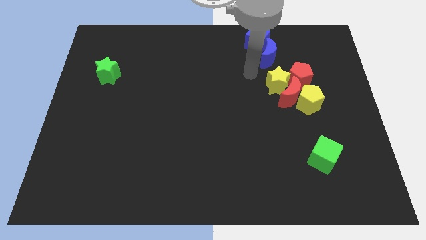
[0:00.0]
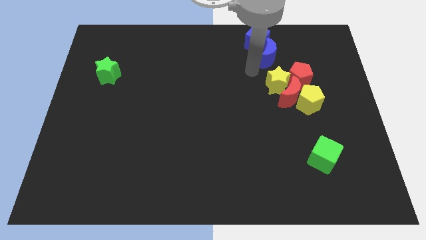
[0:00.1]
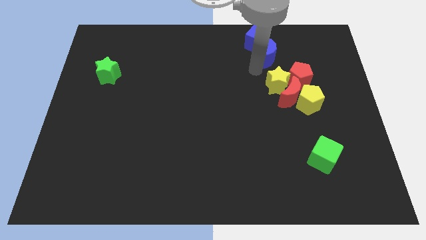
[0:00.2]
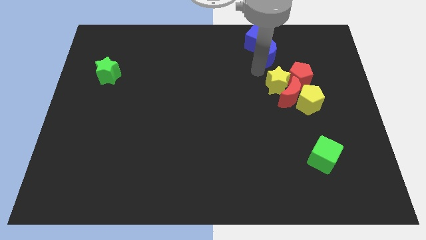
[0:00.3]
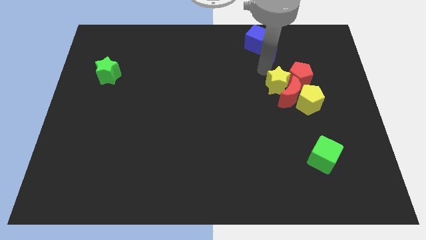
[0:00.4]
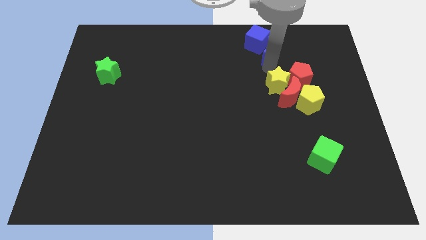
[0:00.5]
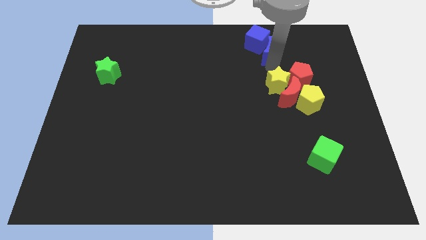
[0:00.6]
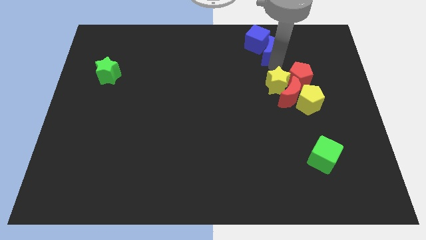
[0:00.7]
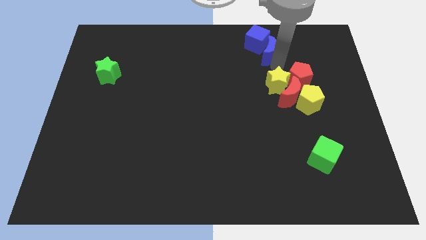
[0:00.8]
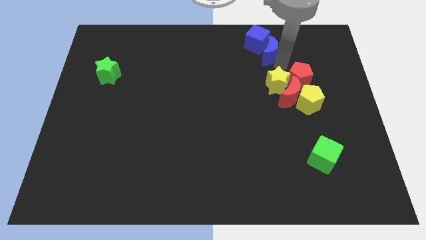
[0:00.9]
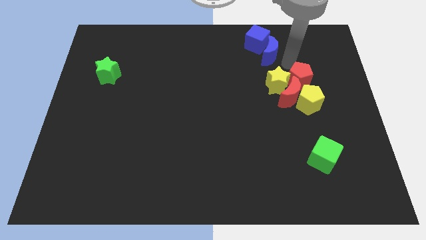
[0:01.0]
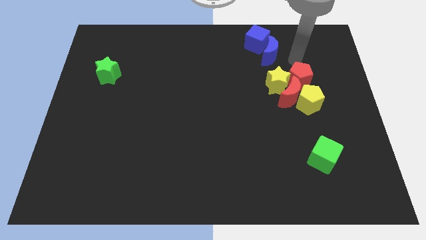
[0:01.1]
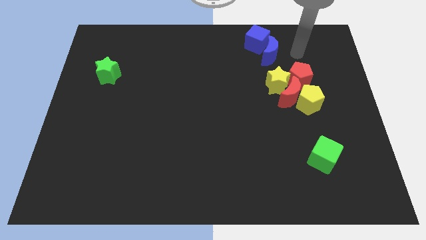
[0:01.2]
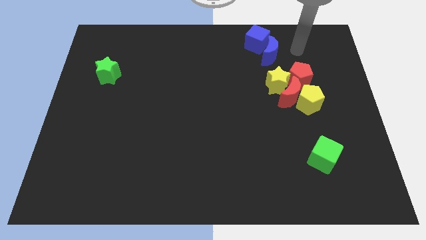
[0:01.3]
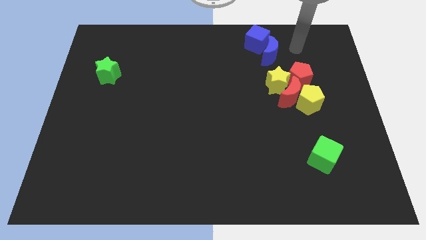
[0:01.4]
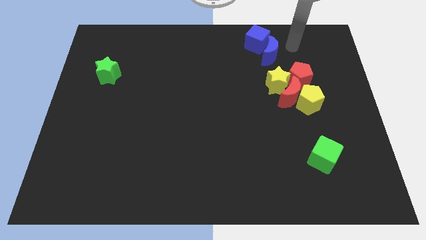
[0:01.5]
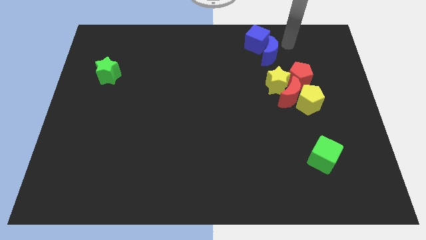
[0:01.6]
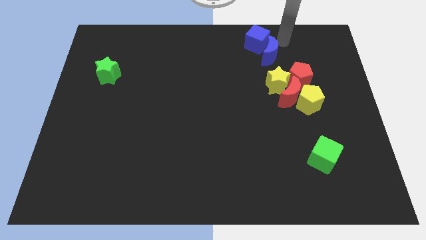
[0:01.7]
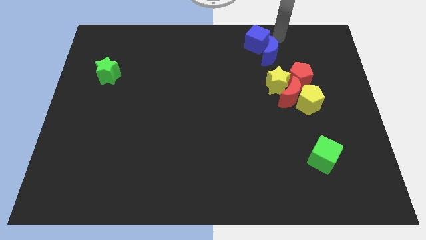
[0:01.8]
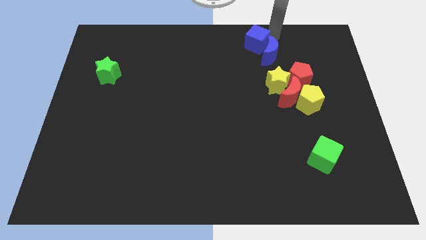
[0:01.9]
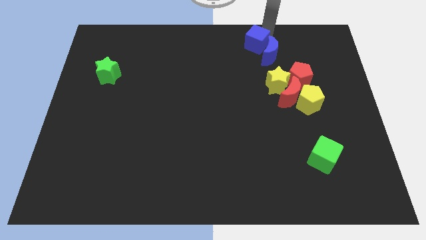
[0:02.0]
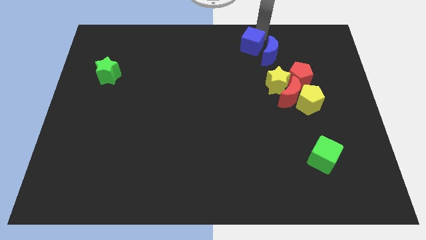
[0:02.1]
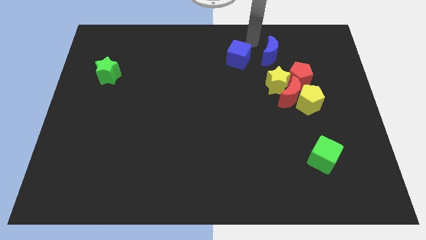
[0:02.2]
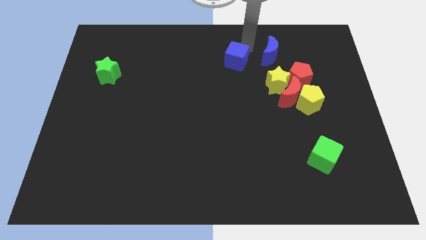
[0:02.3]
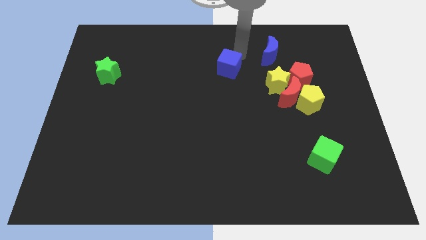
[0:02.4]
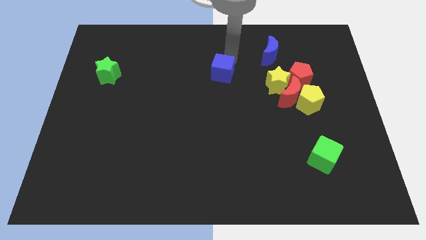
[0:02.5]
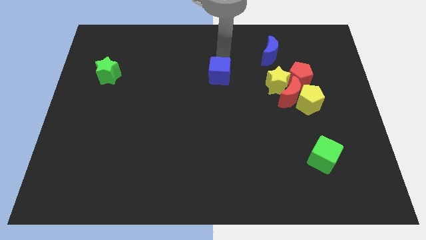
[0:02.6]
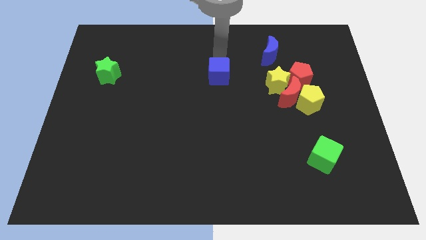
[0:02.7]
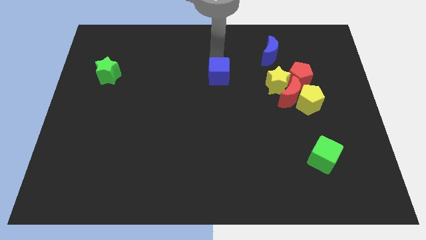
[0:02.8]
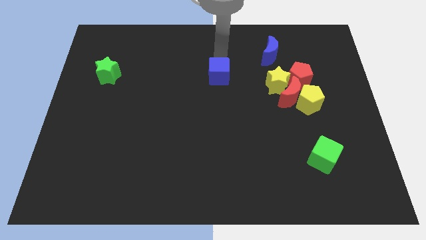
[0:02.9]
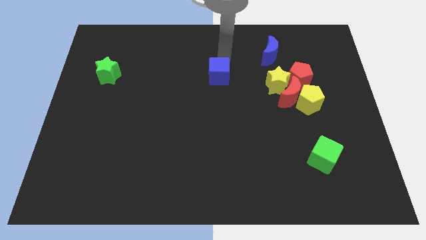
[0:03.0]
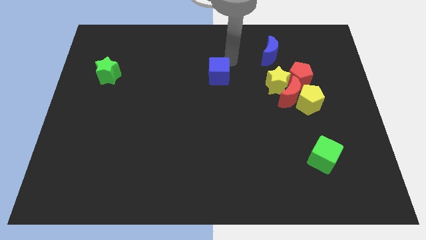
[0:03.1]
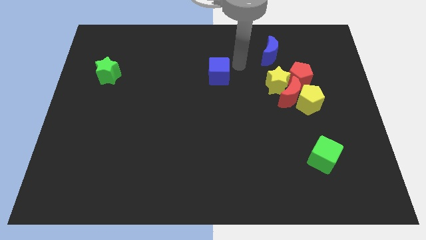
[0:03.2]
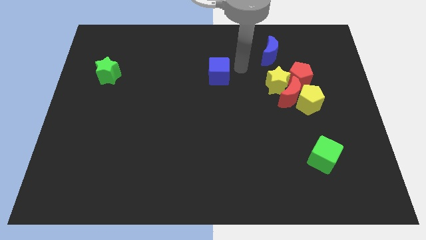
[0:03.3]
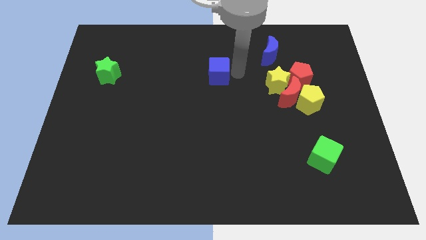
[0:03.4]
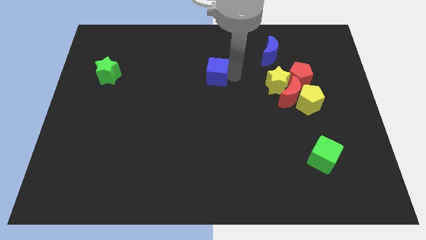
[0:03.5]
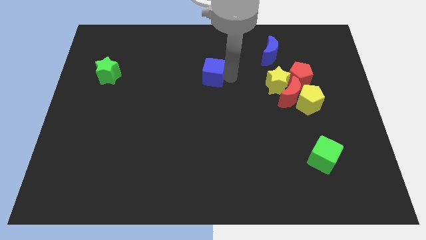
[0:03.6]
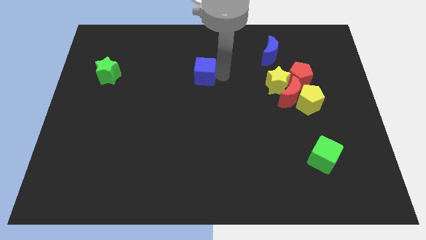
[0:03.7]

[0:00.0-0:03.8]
move the blue cube towards left side of the board

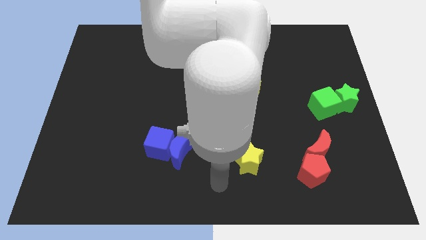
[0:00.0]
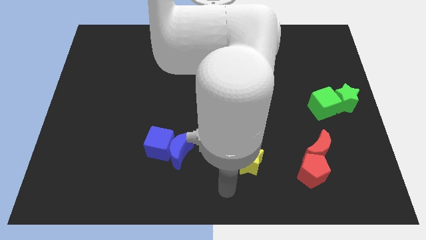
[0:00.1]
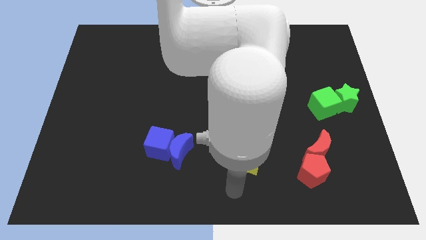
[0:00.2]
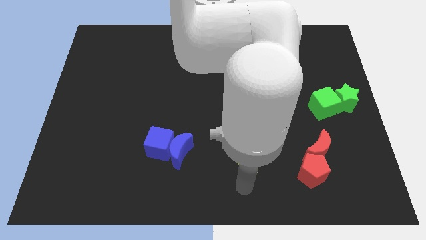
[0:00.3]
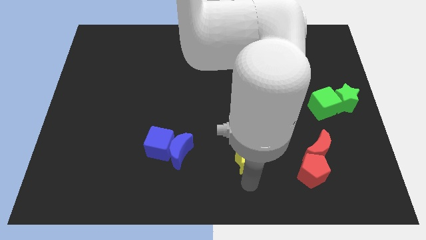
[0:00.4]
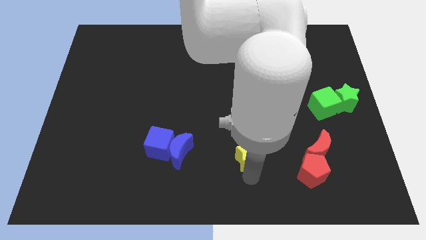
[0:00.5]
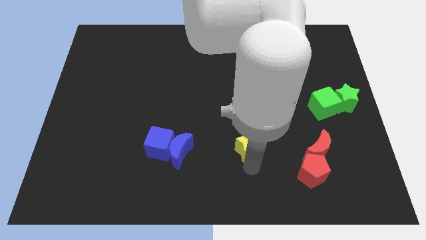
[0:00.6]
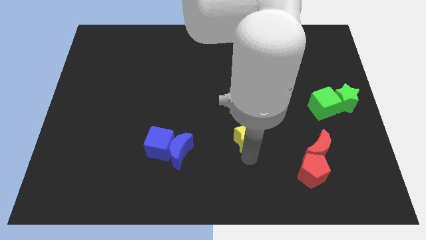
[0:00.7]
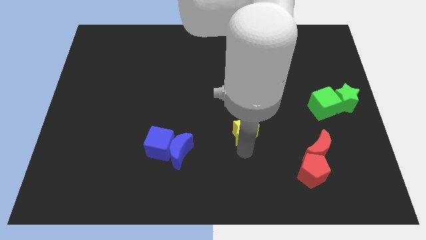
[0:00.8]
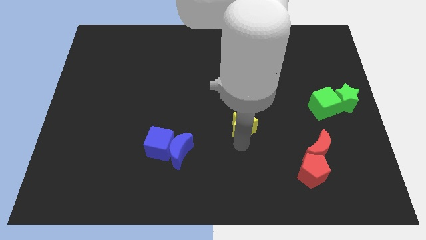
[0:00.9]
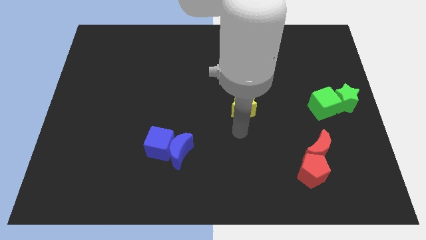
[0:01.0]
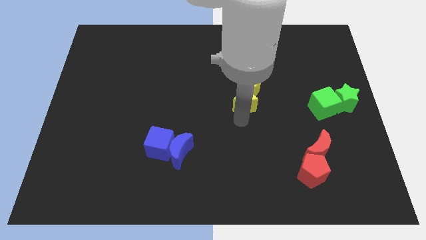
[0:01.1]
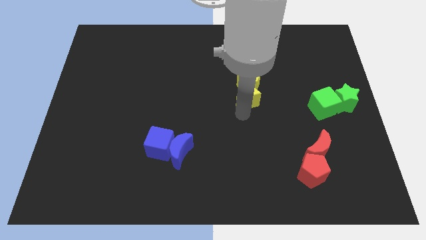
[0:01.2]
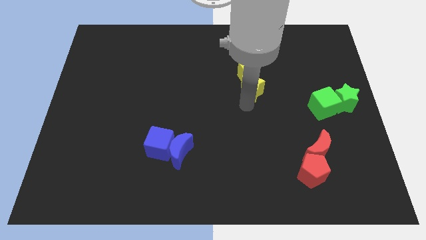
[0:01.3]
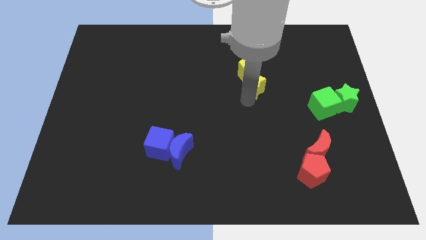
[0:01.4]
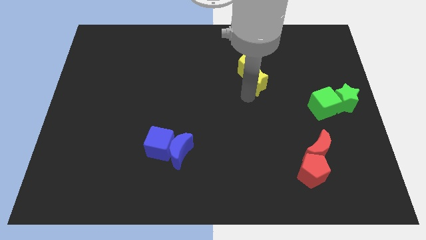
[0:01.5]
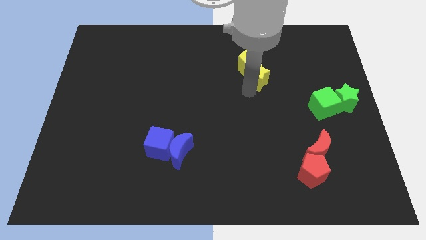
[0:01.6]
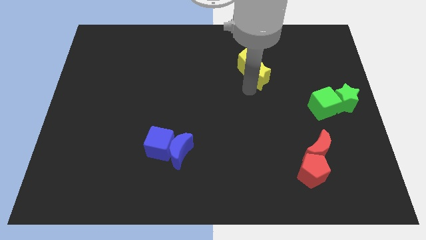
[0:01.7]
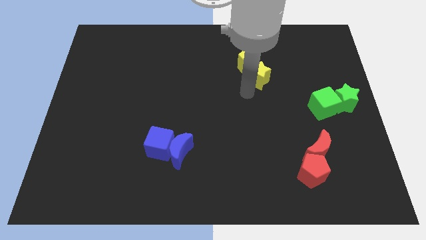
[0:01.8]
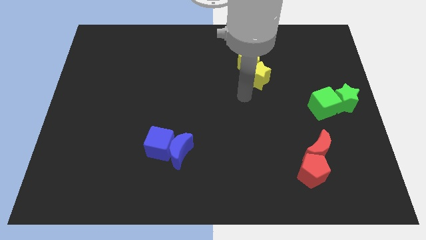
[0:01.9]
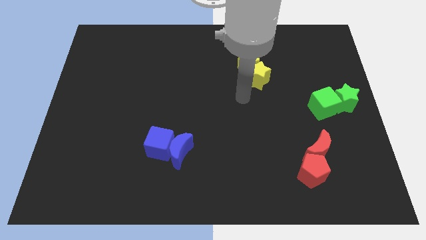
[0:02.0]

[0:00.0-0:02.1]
drag the yellow star and yellow pentagon towards top center

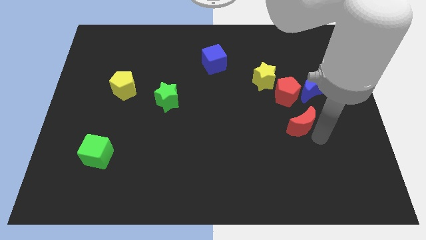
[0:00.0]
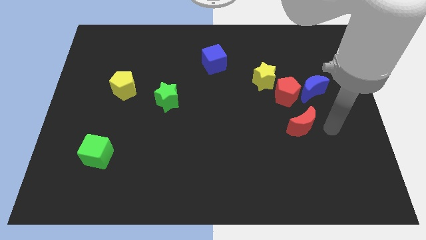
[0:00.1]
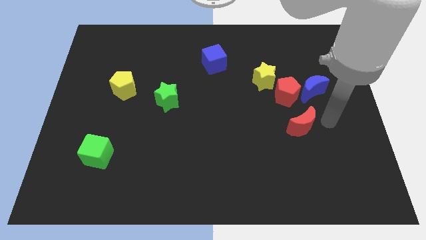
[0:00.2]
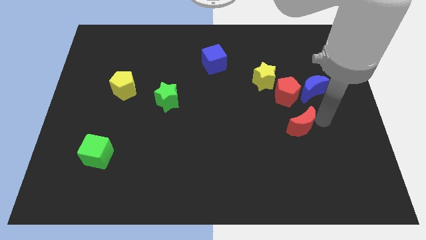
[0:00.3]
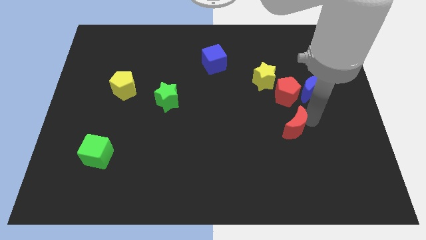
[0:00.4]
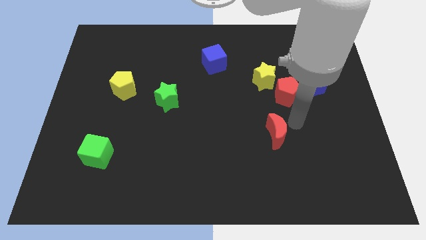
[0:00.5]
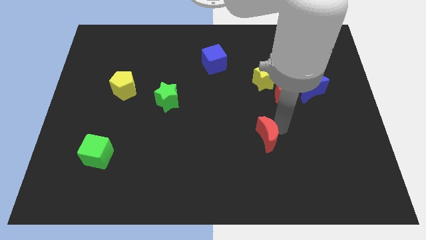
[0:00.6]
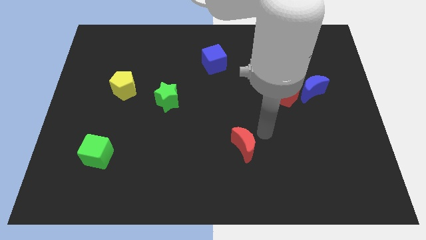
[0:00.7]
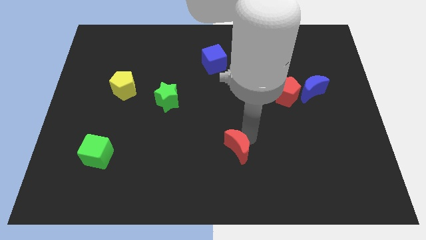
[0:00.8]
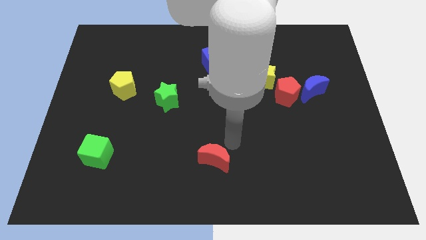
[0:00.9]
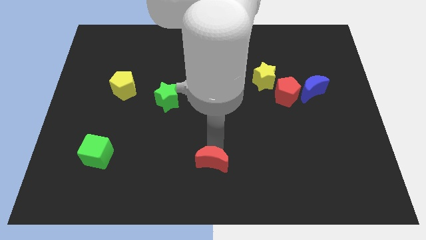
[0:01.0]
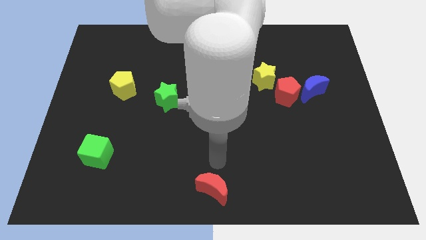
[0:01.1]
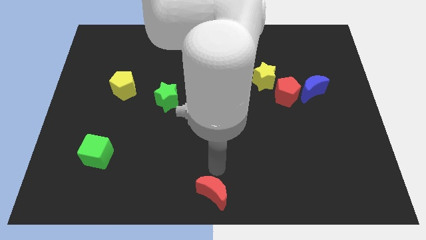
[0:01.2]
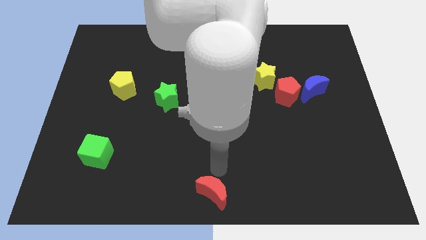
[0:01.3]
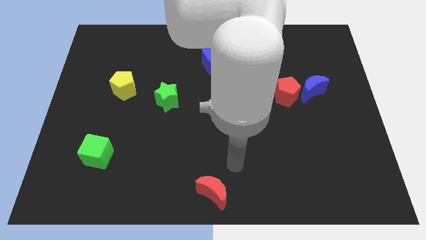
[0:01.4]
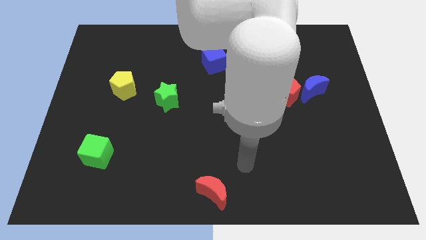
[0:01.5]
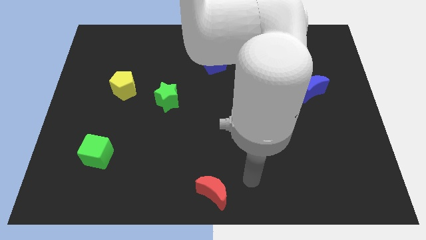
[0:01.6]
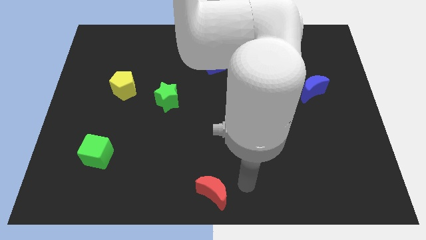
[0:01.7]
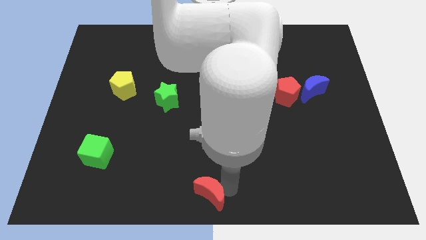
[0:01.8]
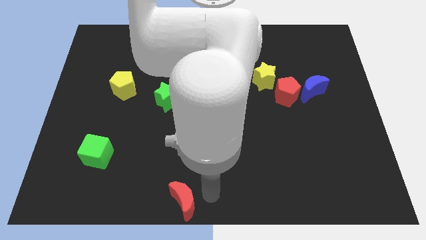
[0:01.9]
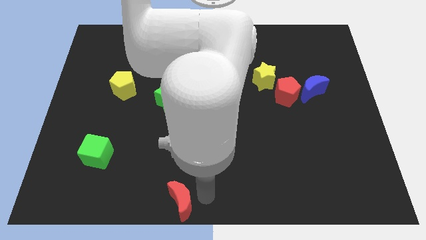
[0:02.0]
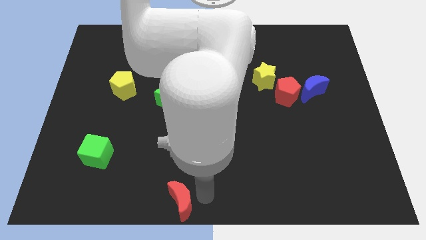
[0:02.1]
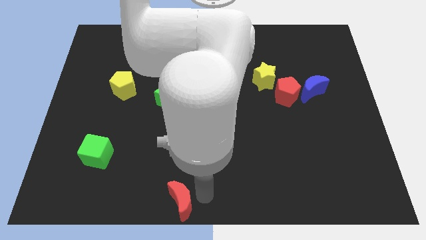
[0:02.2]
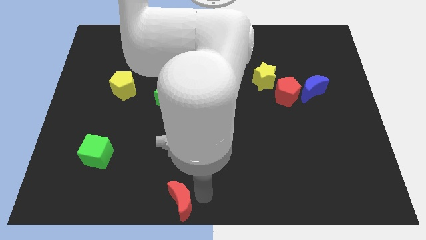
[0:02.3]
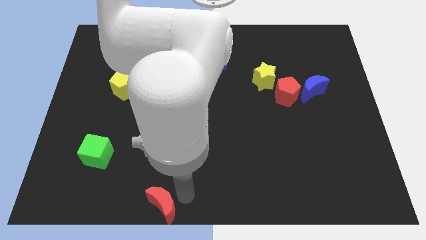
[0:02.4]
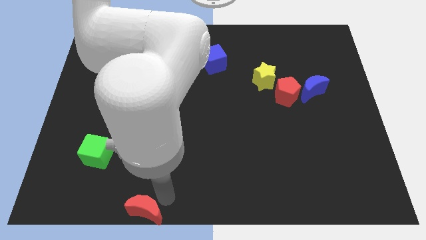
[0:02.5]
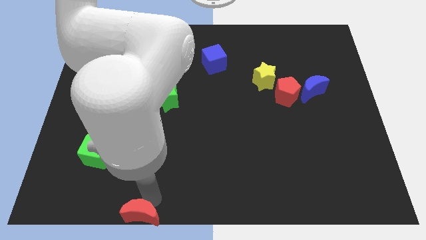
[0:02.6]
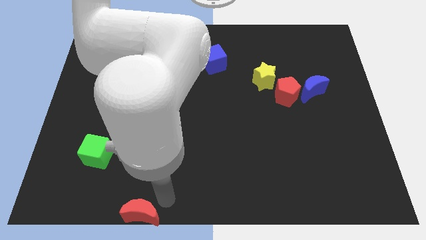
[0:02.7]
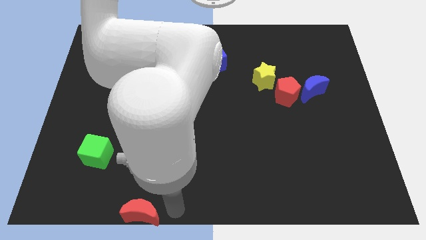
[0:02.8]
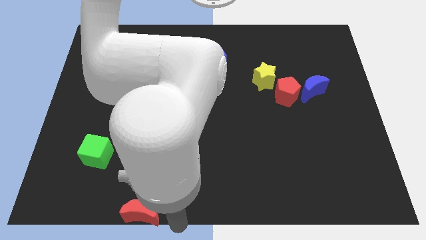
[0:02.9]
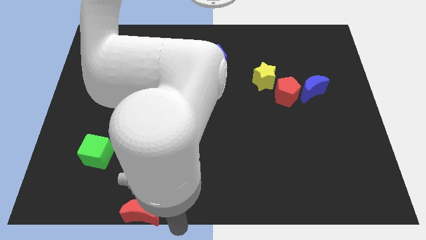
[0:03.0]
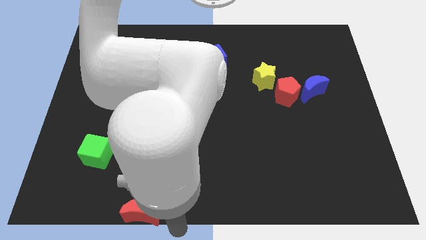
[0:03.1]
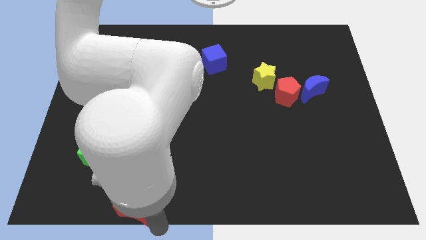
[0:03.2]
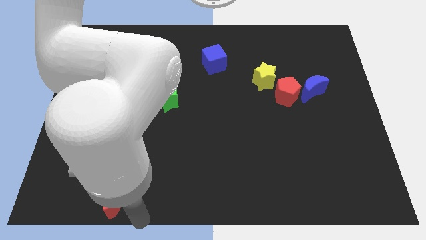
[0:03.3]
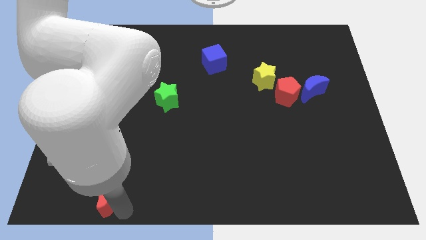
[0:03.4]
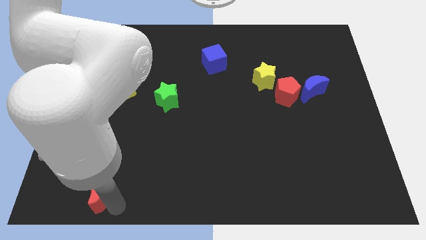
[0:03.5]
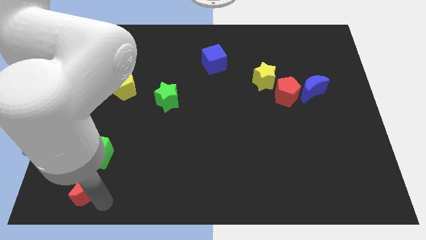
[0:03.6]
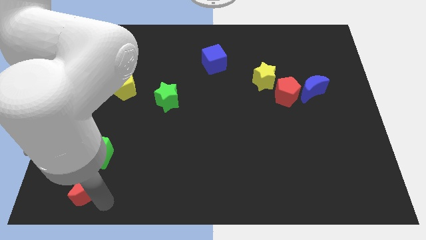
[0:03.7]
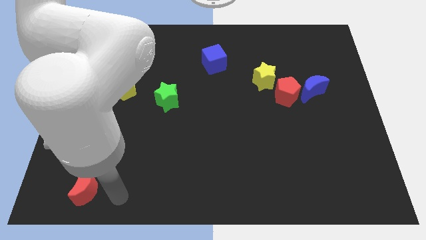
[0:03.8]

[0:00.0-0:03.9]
place the red moon below the green cube
